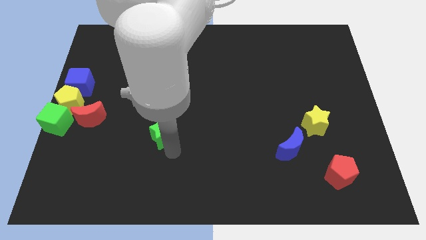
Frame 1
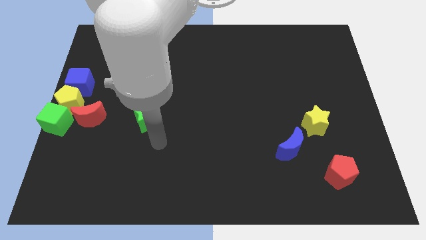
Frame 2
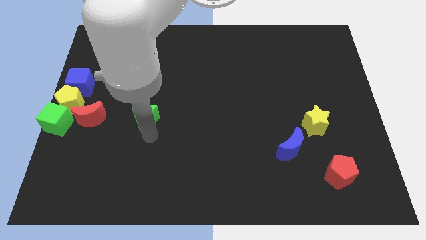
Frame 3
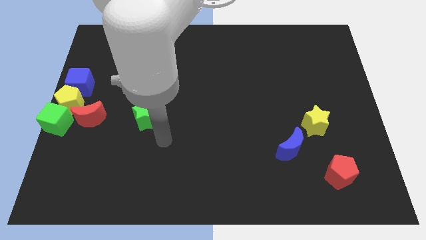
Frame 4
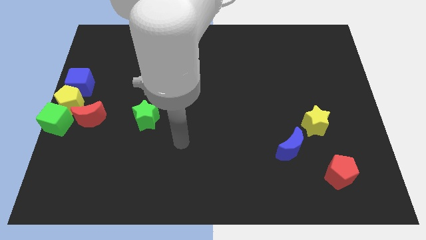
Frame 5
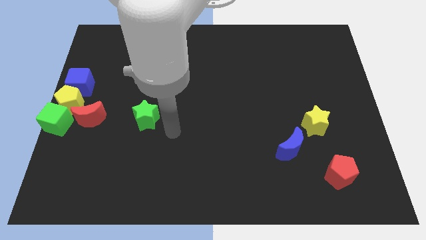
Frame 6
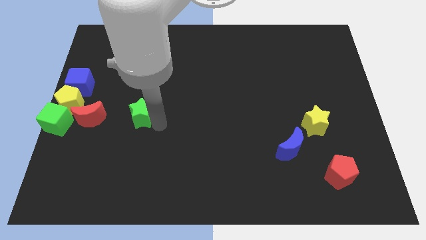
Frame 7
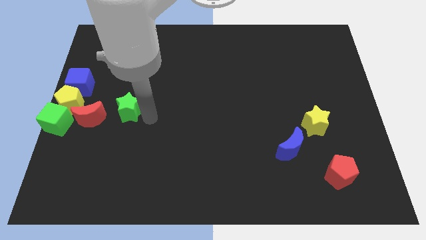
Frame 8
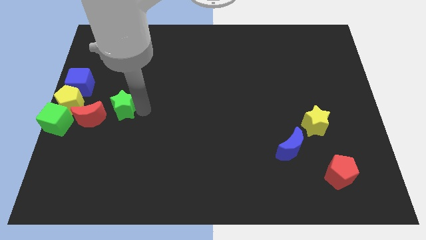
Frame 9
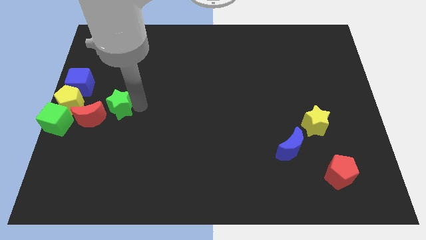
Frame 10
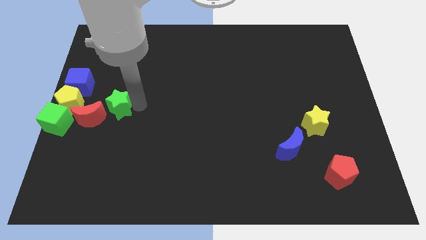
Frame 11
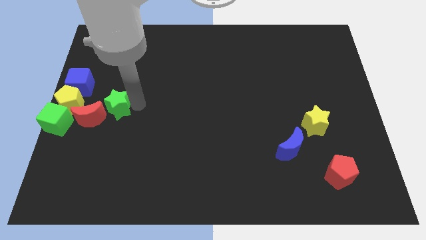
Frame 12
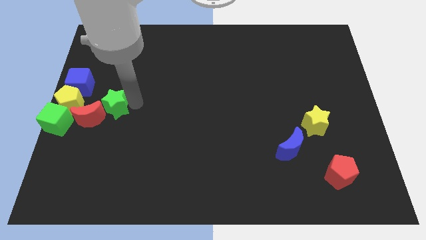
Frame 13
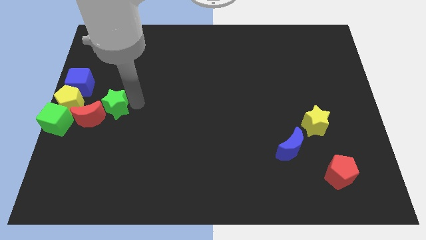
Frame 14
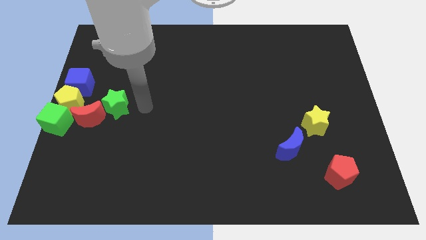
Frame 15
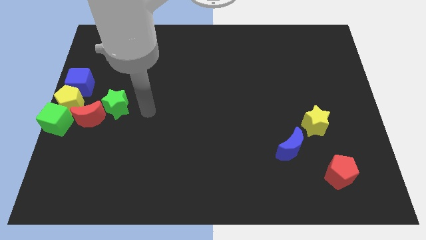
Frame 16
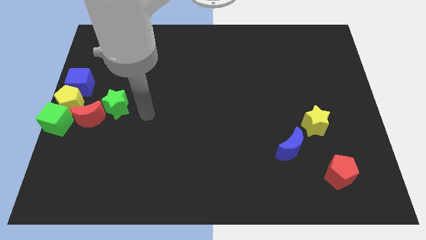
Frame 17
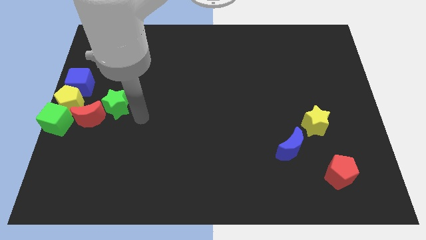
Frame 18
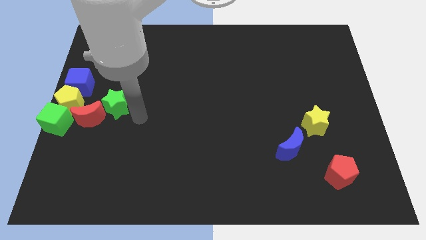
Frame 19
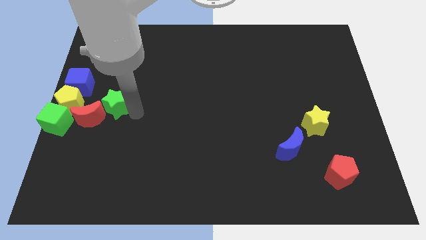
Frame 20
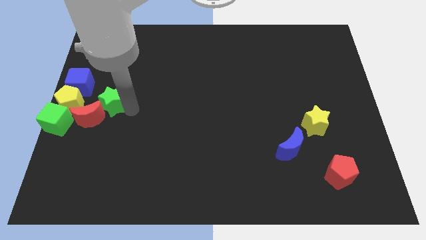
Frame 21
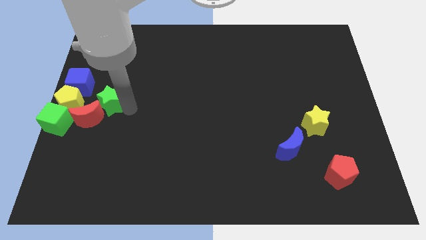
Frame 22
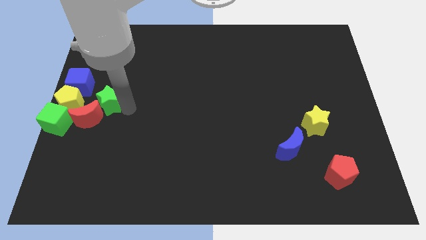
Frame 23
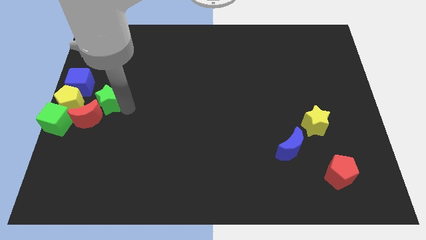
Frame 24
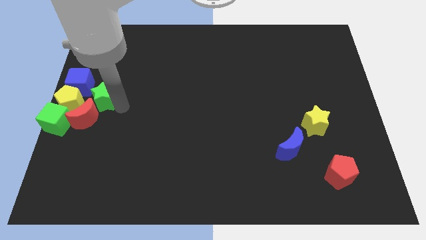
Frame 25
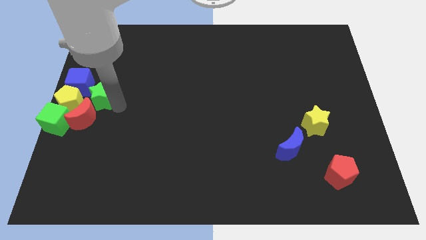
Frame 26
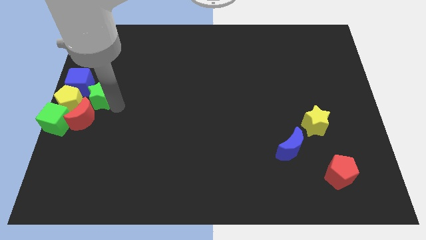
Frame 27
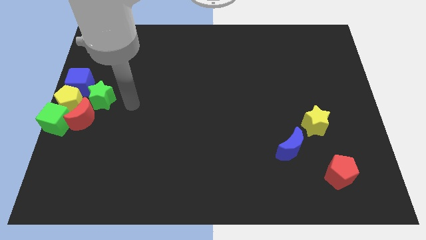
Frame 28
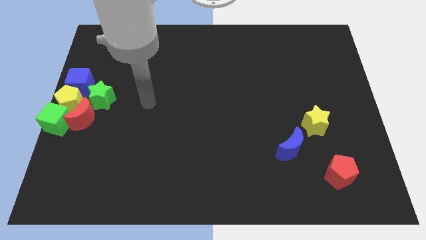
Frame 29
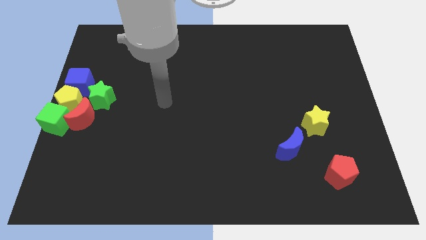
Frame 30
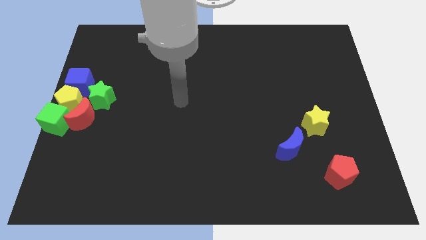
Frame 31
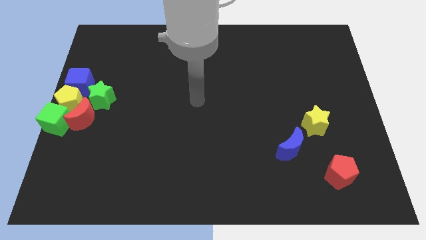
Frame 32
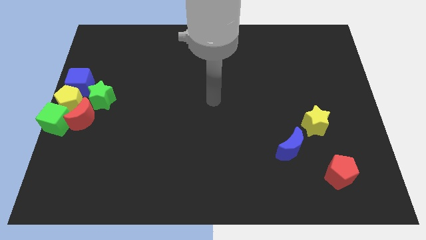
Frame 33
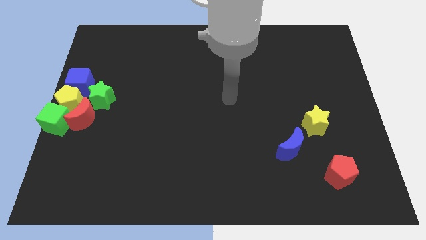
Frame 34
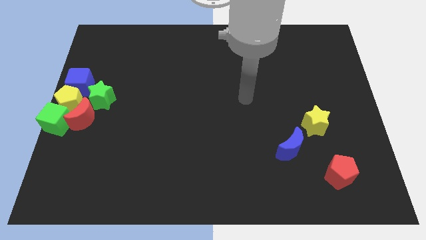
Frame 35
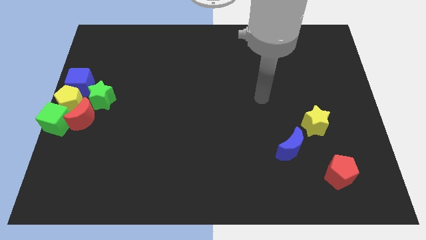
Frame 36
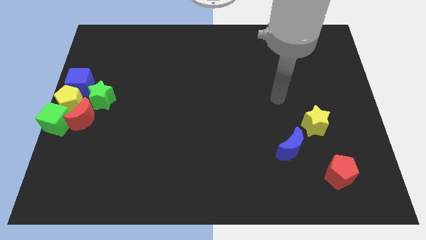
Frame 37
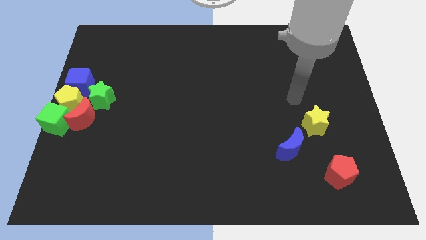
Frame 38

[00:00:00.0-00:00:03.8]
push green cube in to red crescent

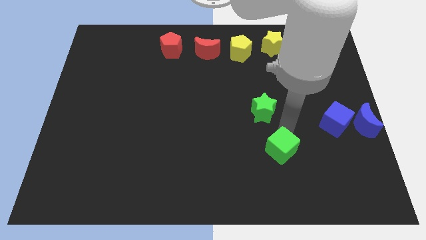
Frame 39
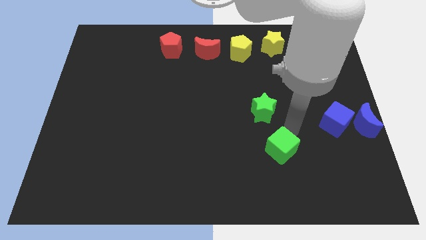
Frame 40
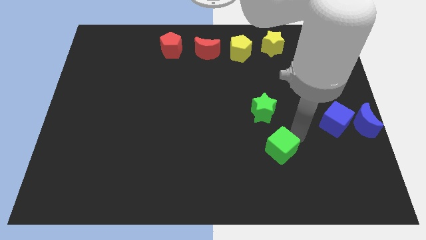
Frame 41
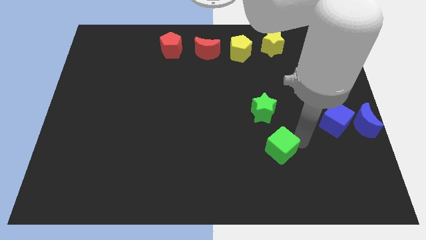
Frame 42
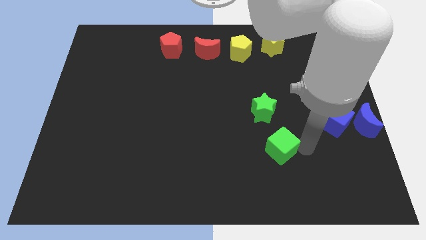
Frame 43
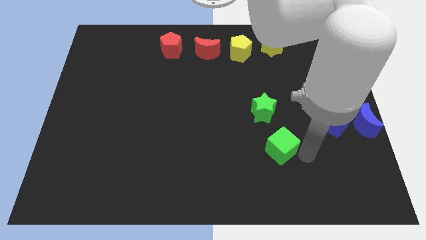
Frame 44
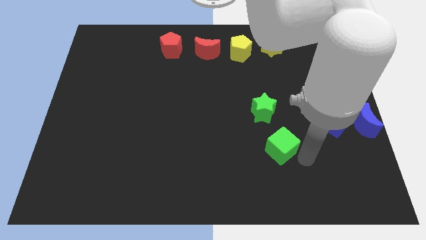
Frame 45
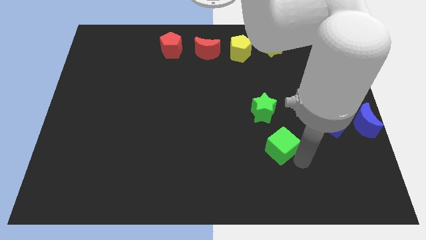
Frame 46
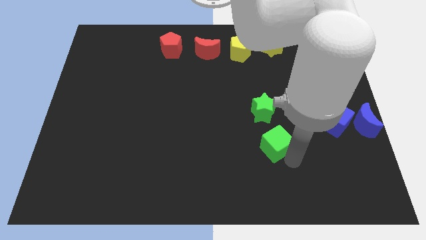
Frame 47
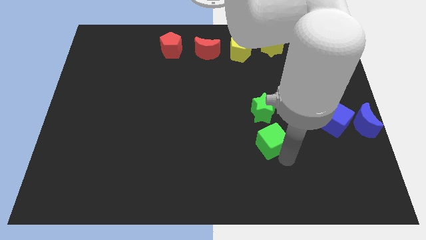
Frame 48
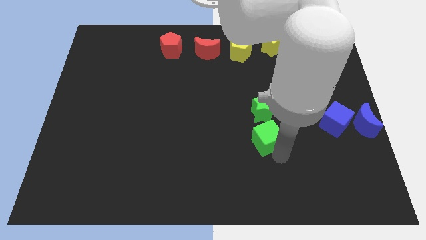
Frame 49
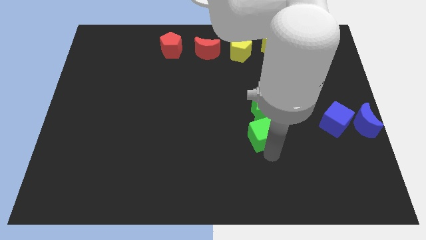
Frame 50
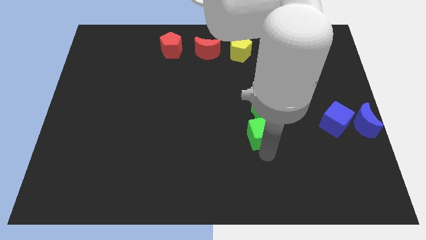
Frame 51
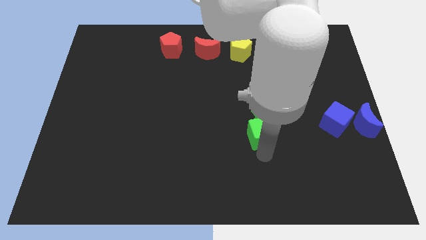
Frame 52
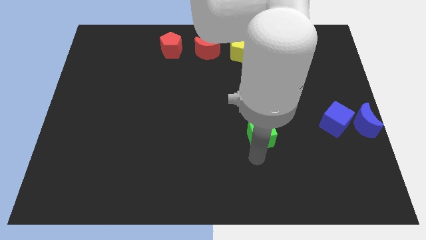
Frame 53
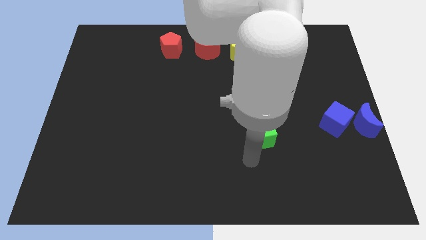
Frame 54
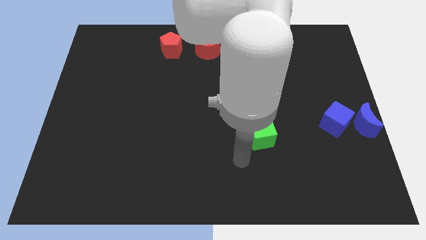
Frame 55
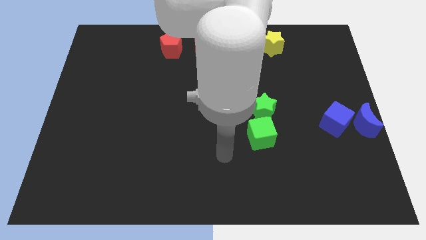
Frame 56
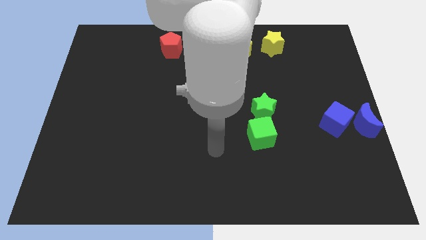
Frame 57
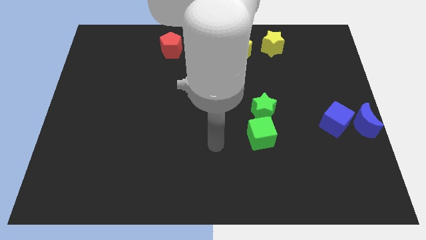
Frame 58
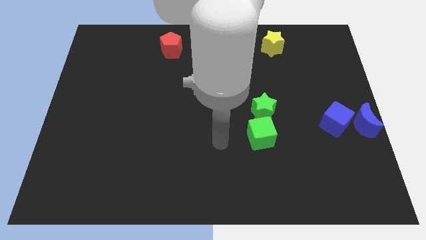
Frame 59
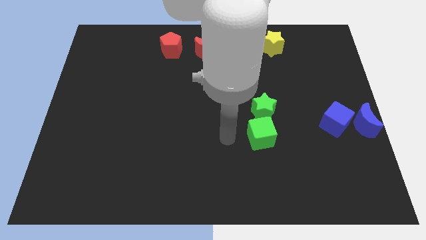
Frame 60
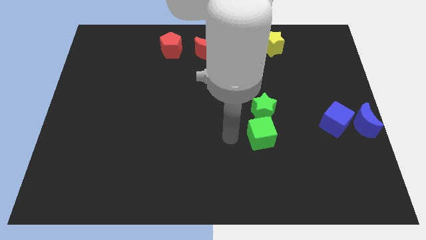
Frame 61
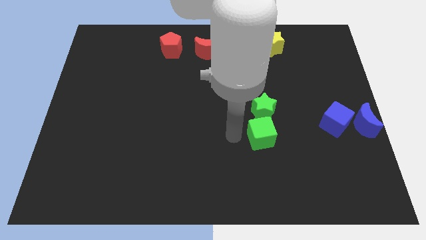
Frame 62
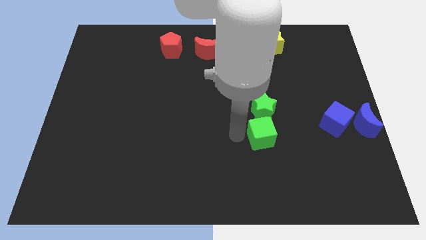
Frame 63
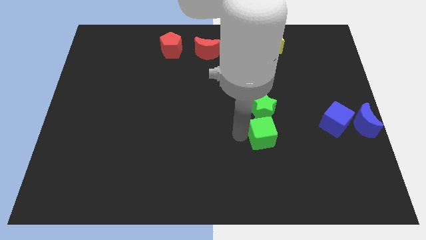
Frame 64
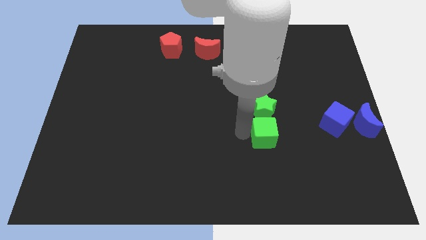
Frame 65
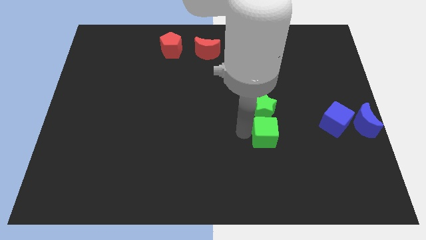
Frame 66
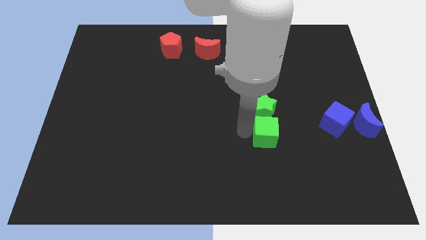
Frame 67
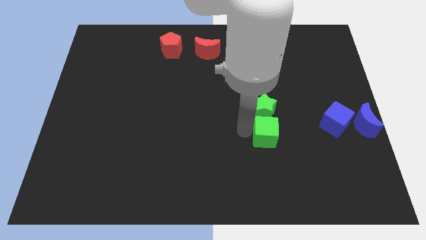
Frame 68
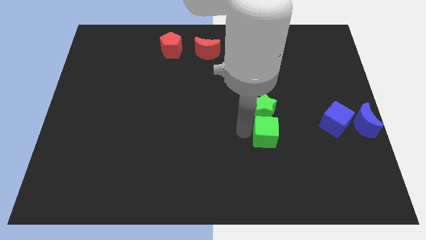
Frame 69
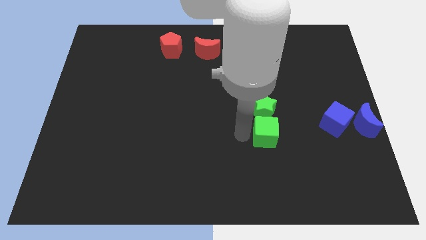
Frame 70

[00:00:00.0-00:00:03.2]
move the green cube close to the green star

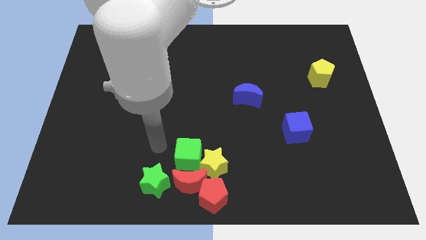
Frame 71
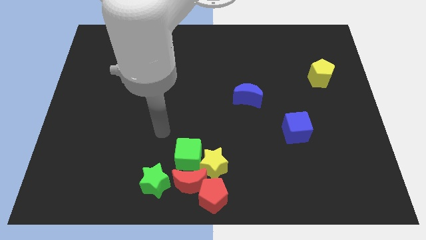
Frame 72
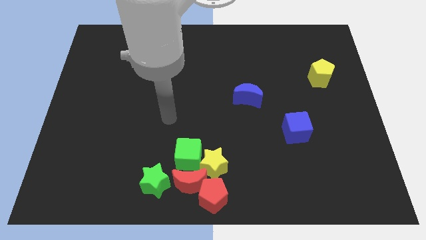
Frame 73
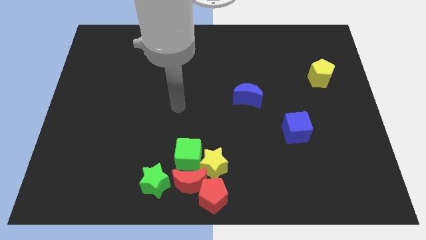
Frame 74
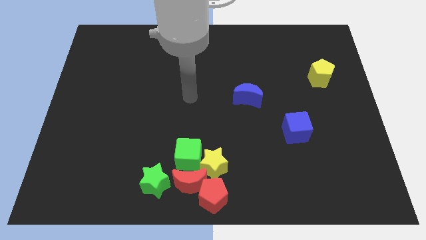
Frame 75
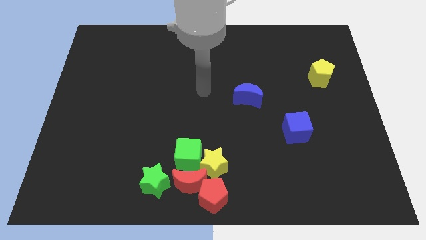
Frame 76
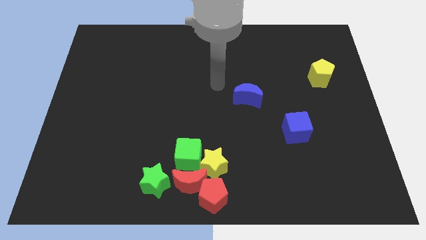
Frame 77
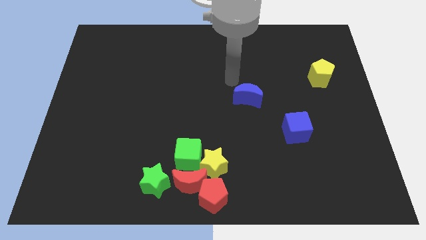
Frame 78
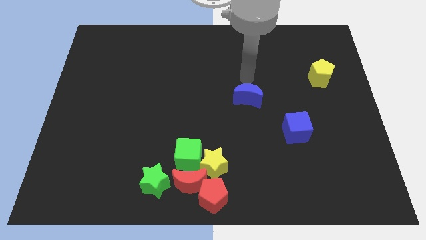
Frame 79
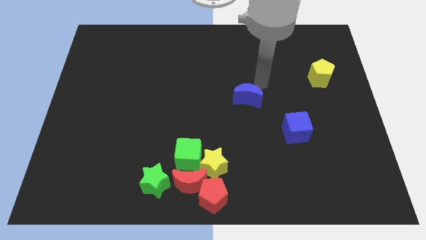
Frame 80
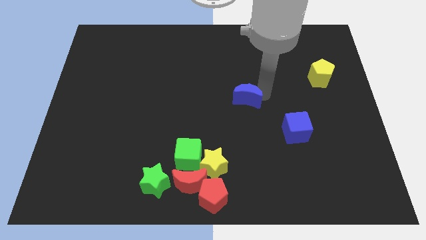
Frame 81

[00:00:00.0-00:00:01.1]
touch the blue crescent with your arm

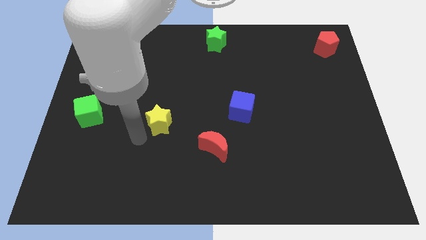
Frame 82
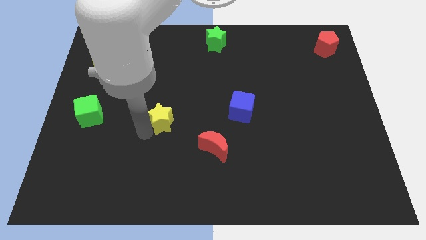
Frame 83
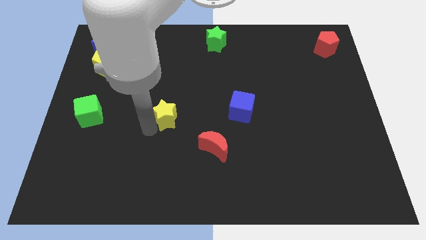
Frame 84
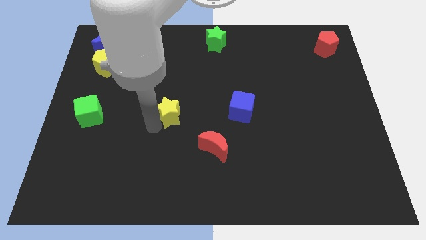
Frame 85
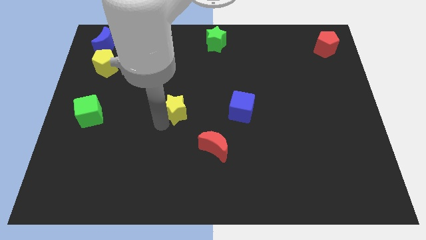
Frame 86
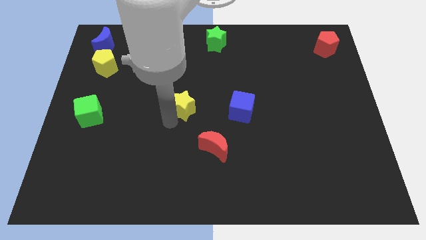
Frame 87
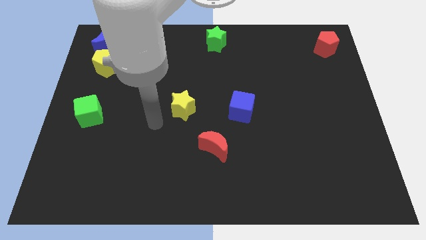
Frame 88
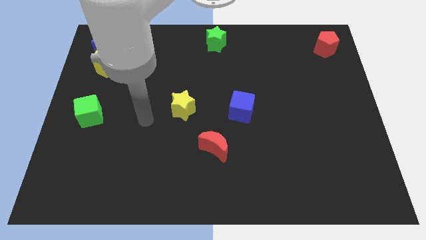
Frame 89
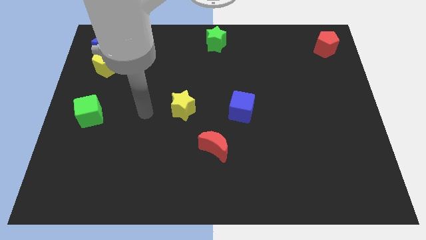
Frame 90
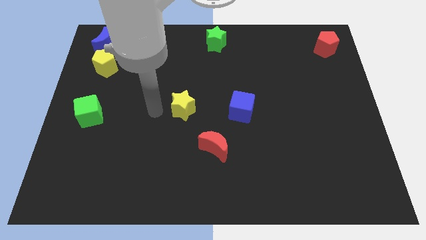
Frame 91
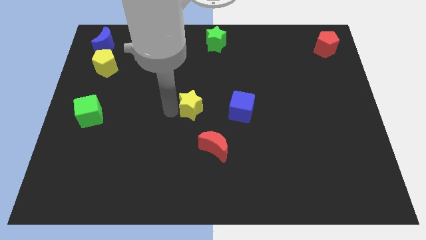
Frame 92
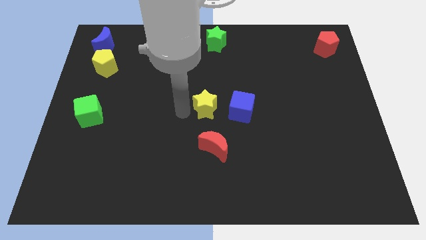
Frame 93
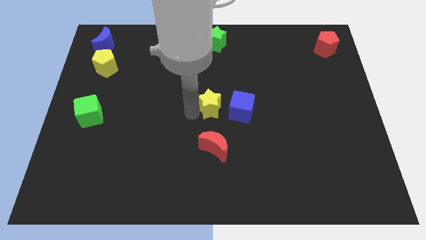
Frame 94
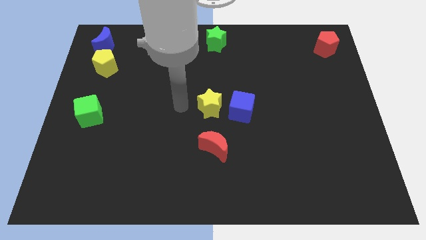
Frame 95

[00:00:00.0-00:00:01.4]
put the yellow star to the left side of the blue cube
